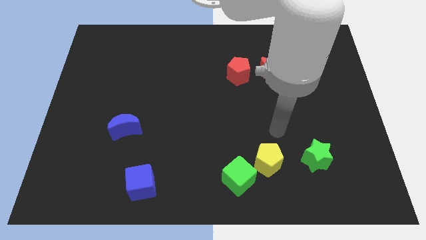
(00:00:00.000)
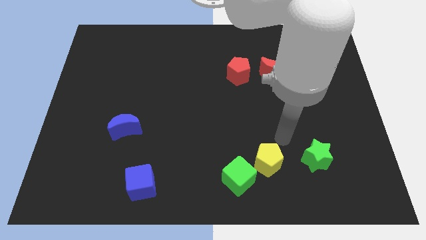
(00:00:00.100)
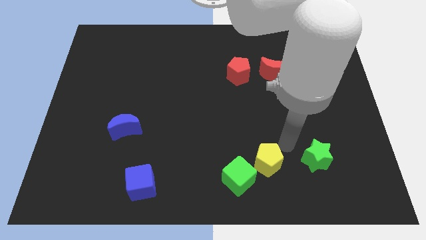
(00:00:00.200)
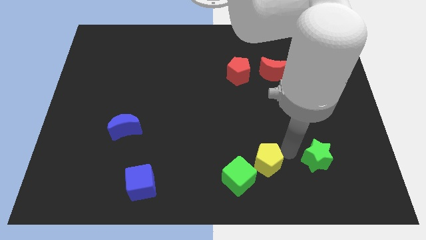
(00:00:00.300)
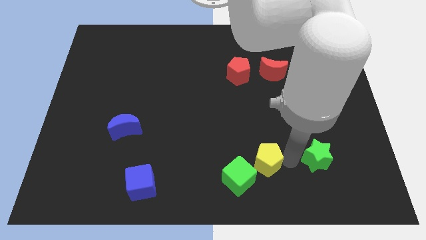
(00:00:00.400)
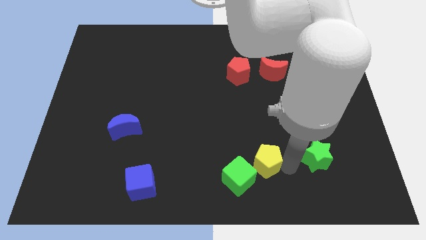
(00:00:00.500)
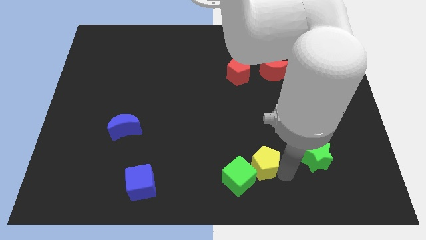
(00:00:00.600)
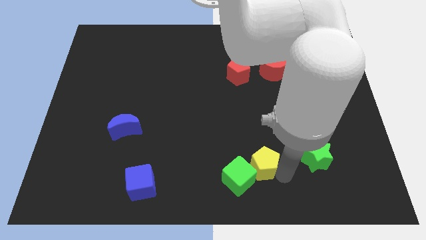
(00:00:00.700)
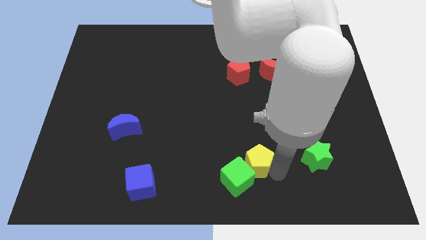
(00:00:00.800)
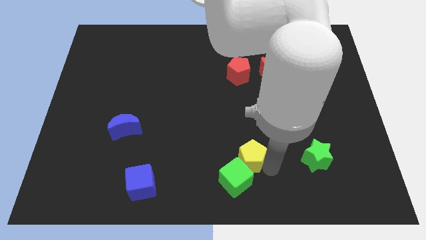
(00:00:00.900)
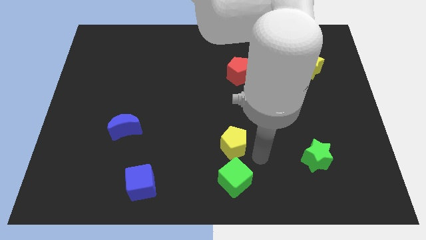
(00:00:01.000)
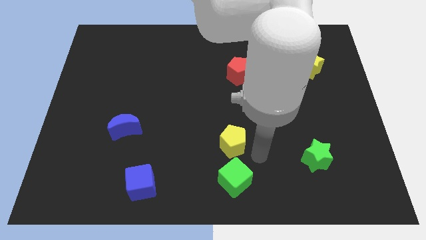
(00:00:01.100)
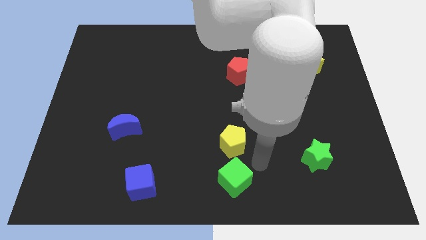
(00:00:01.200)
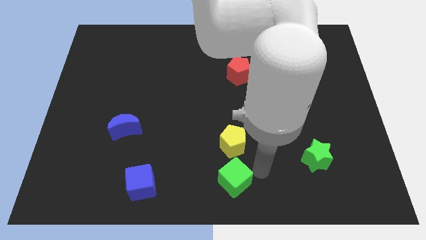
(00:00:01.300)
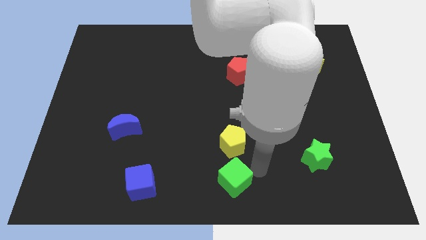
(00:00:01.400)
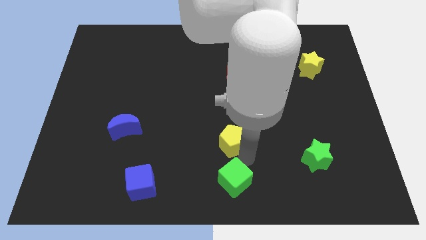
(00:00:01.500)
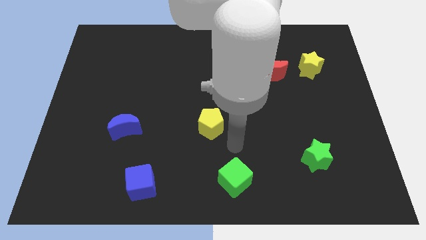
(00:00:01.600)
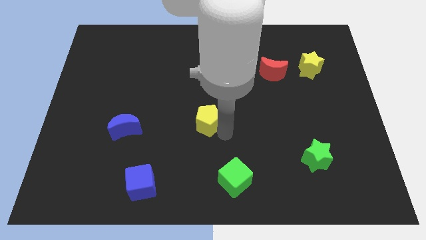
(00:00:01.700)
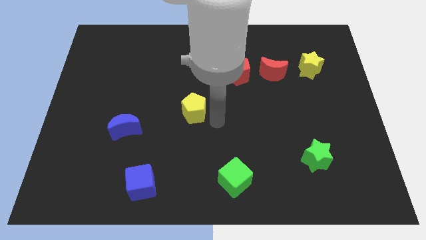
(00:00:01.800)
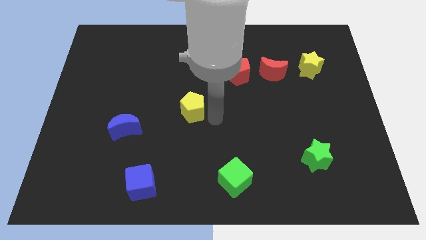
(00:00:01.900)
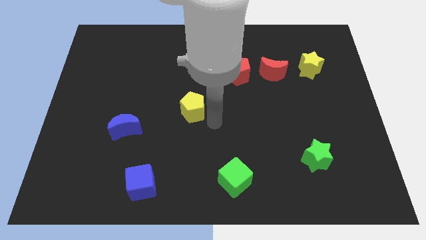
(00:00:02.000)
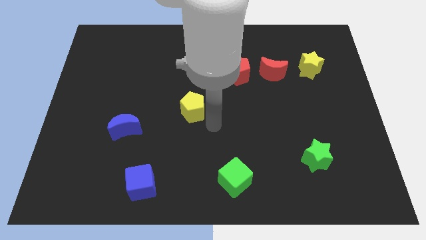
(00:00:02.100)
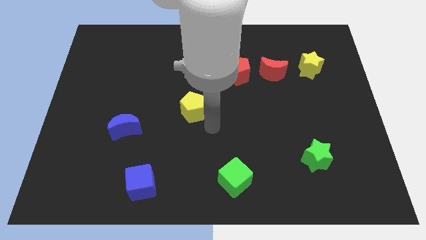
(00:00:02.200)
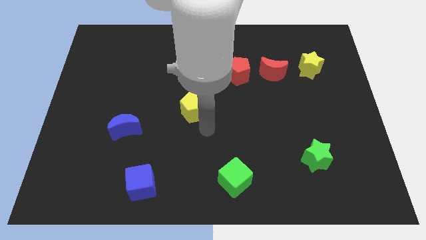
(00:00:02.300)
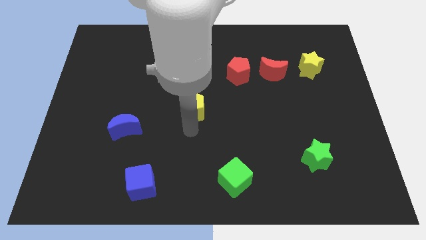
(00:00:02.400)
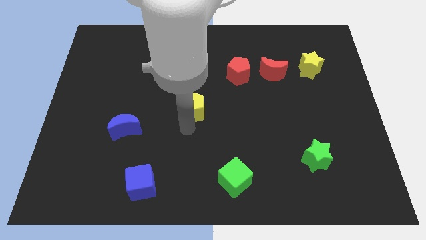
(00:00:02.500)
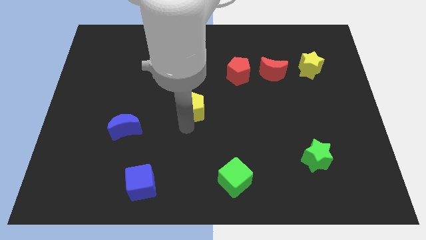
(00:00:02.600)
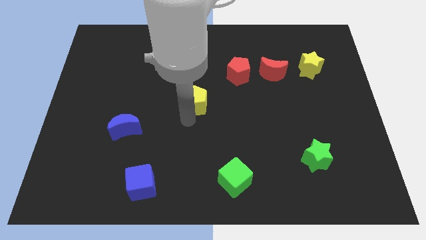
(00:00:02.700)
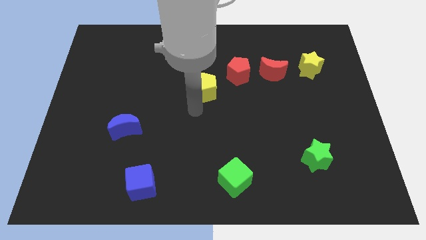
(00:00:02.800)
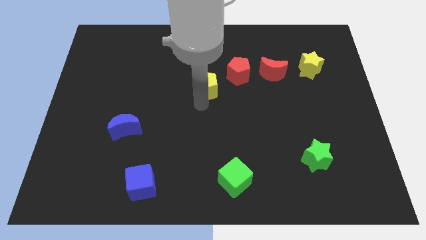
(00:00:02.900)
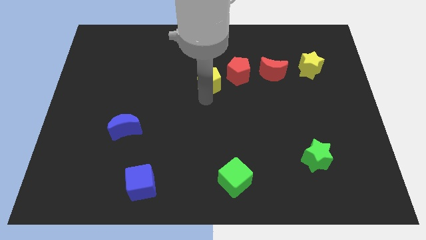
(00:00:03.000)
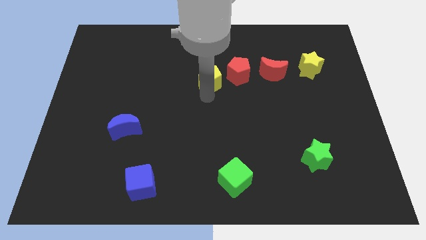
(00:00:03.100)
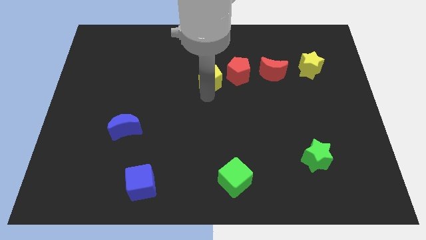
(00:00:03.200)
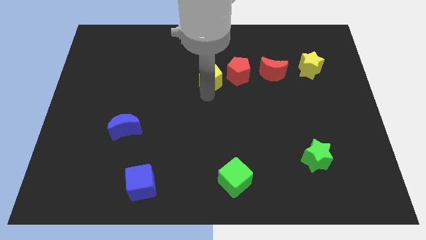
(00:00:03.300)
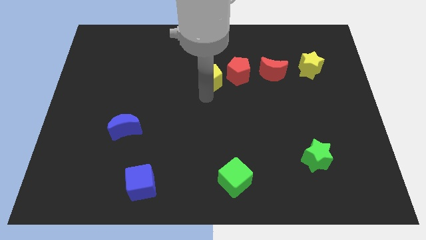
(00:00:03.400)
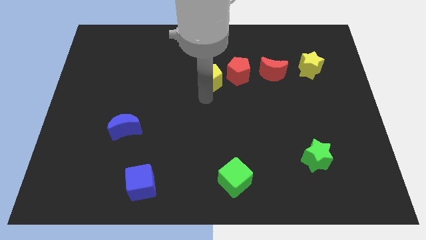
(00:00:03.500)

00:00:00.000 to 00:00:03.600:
push the yellow pentagon near to the left red pentagon

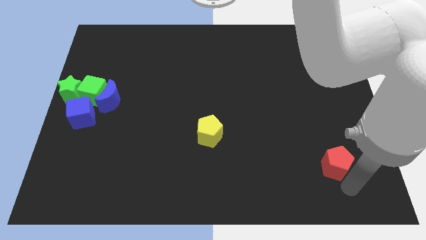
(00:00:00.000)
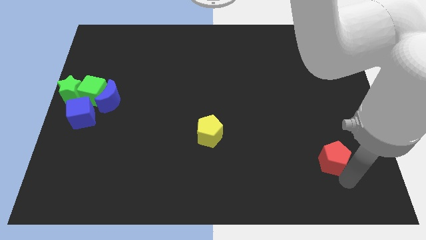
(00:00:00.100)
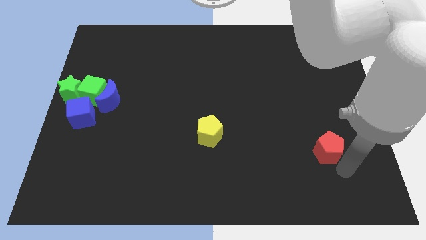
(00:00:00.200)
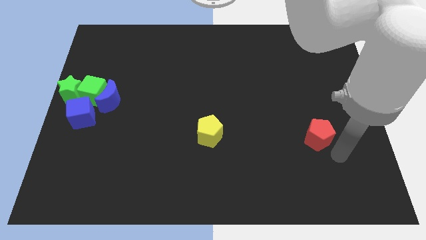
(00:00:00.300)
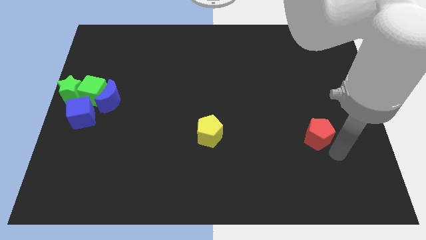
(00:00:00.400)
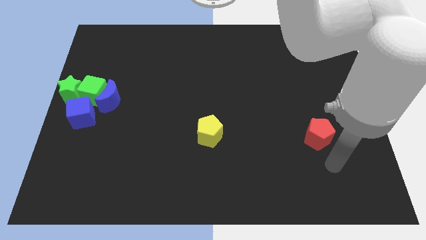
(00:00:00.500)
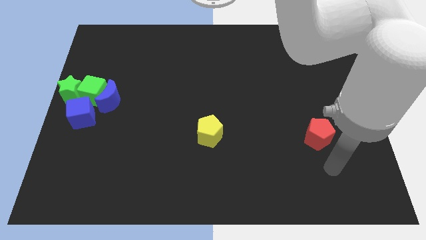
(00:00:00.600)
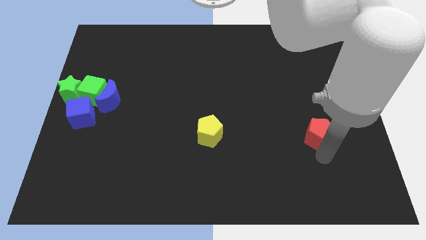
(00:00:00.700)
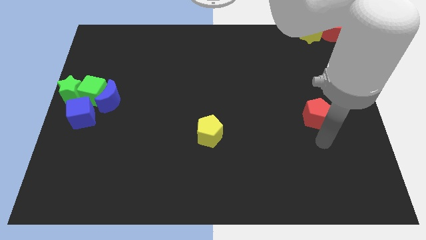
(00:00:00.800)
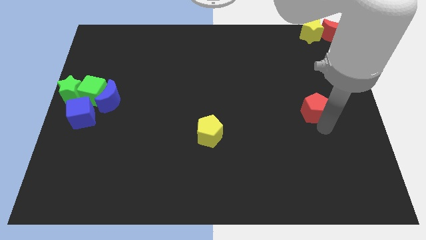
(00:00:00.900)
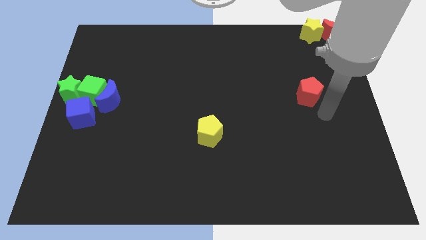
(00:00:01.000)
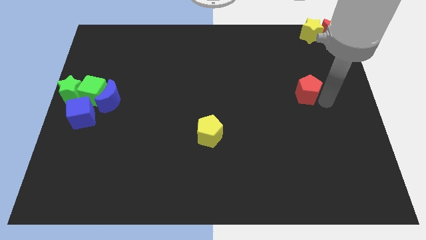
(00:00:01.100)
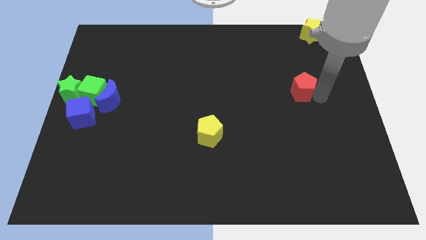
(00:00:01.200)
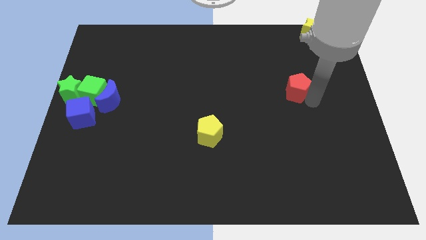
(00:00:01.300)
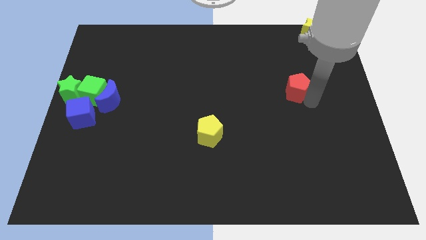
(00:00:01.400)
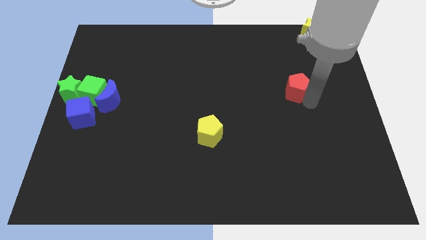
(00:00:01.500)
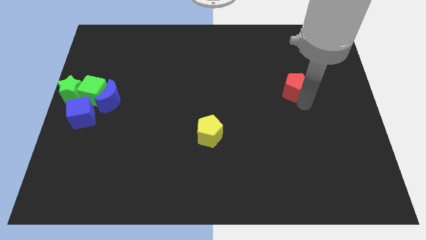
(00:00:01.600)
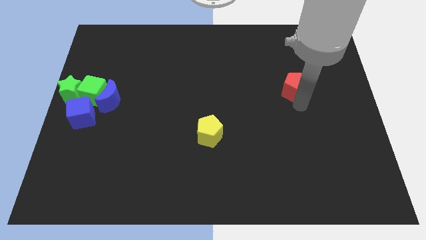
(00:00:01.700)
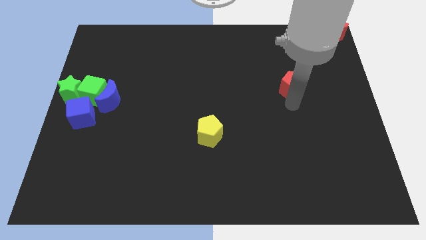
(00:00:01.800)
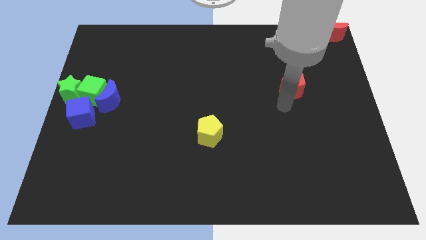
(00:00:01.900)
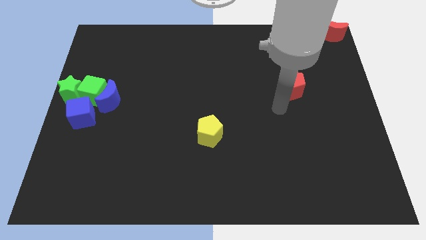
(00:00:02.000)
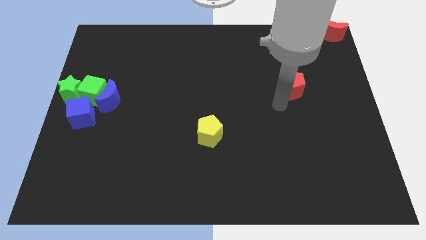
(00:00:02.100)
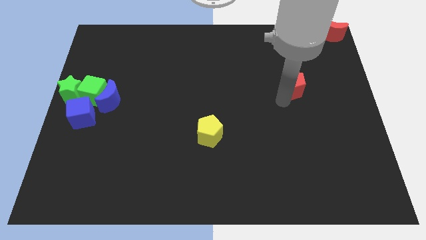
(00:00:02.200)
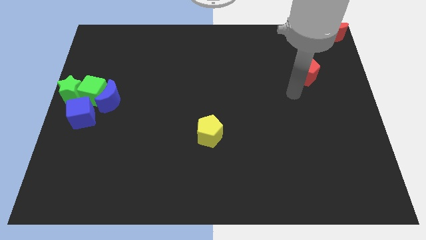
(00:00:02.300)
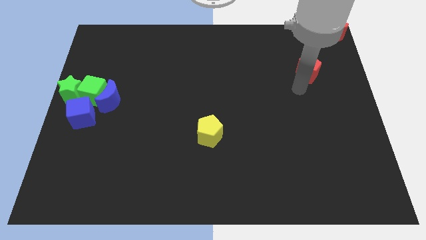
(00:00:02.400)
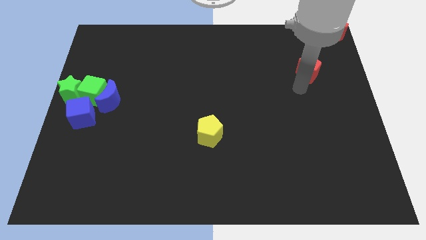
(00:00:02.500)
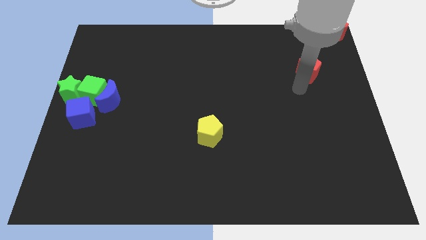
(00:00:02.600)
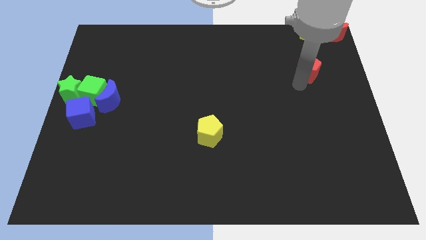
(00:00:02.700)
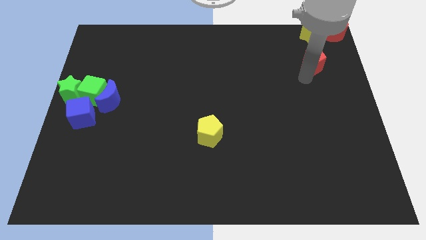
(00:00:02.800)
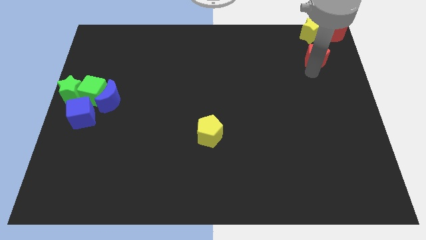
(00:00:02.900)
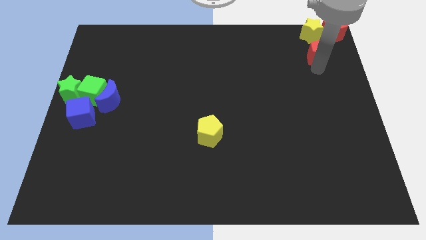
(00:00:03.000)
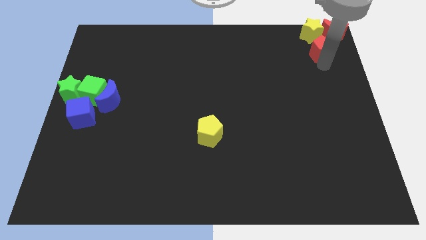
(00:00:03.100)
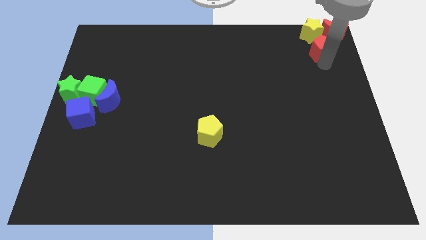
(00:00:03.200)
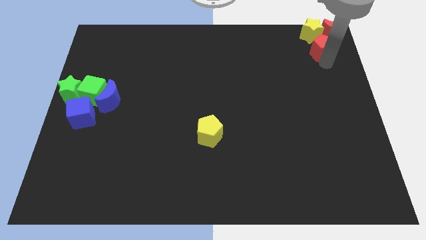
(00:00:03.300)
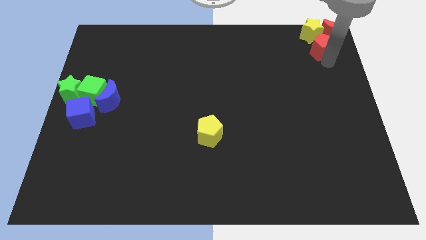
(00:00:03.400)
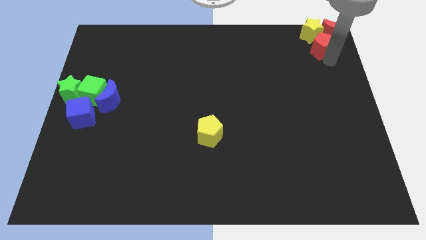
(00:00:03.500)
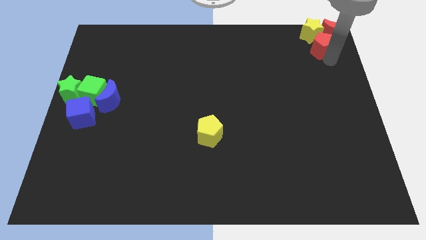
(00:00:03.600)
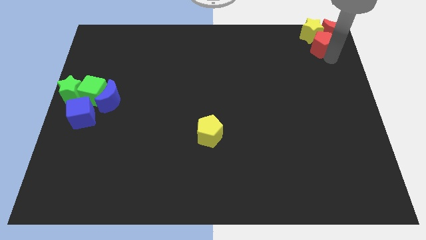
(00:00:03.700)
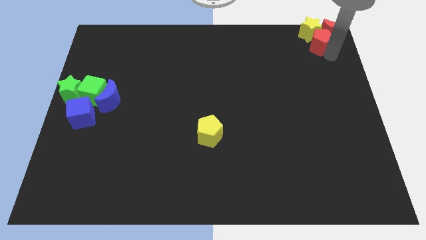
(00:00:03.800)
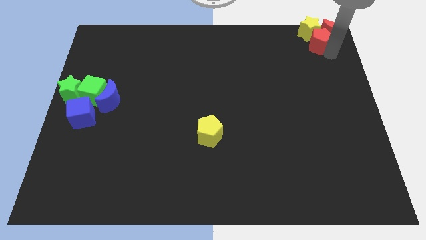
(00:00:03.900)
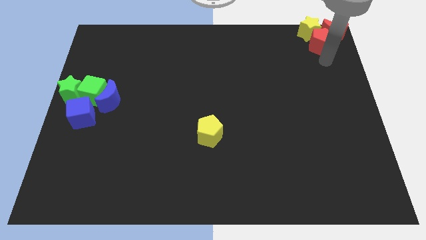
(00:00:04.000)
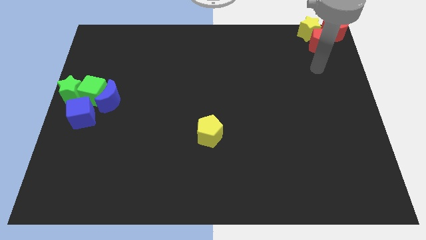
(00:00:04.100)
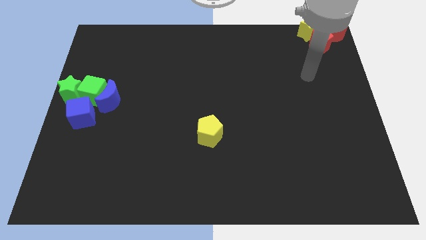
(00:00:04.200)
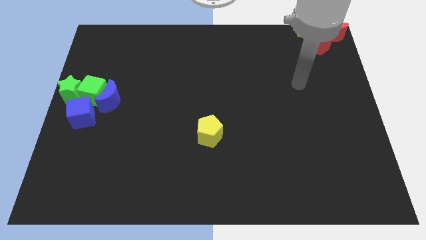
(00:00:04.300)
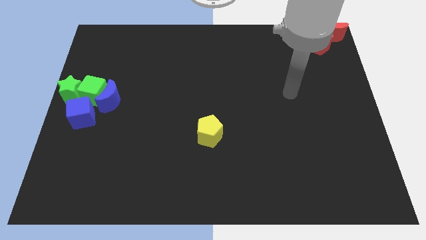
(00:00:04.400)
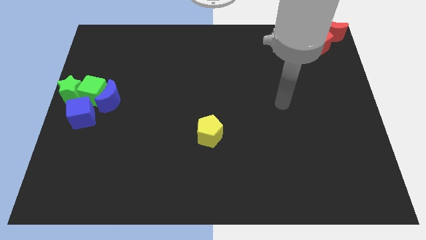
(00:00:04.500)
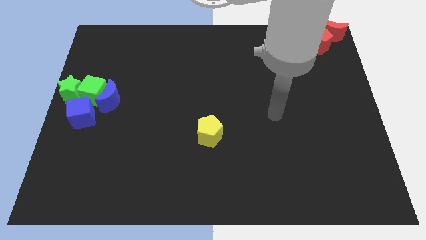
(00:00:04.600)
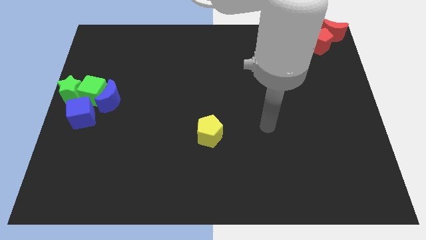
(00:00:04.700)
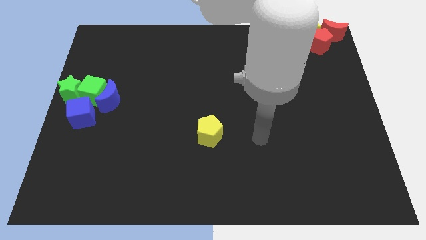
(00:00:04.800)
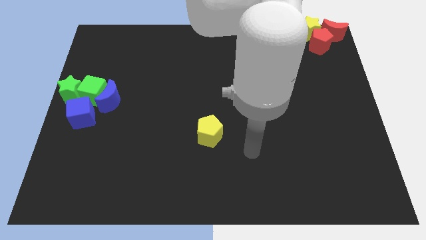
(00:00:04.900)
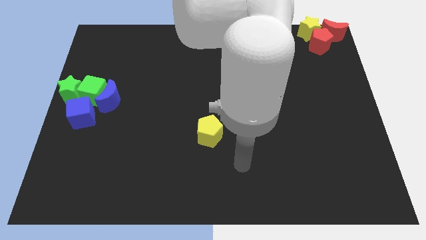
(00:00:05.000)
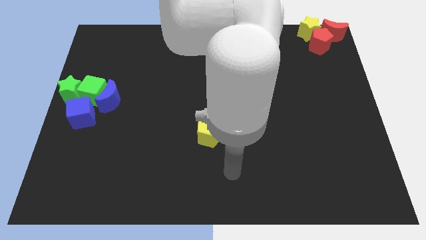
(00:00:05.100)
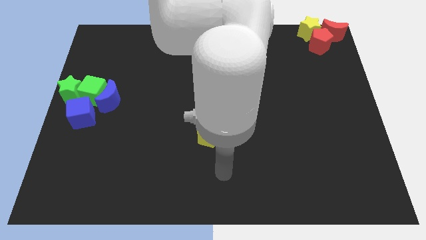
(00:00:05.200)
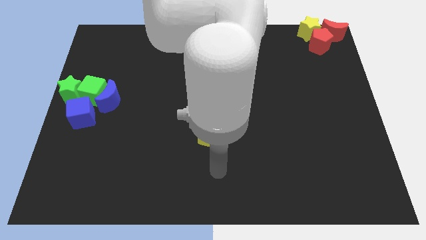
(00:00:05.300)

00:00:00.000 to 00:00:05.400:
push the yellow pentagon into the yellow star
